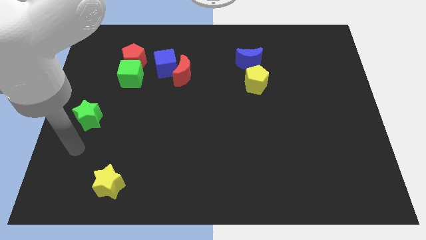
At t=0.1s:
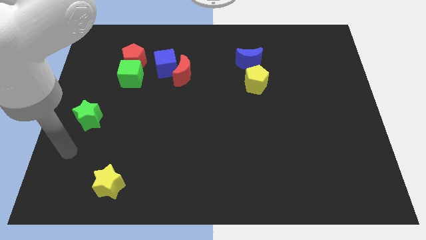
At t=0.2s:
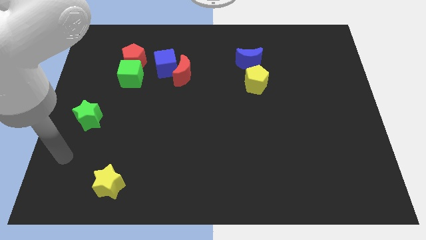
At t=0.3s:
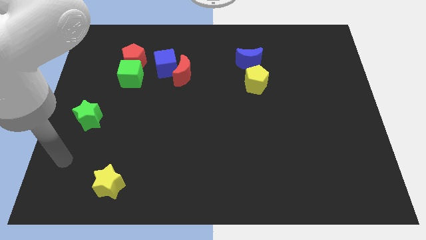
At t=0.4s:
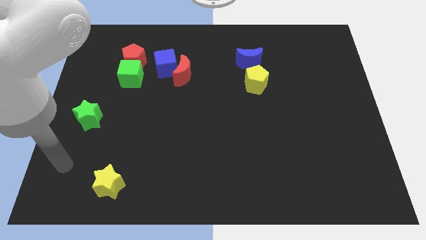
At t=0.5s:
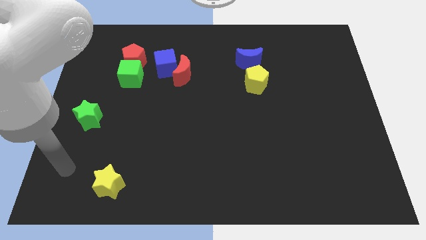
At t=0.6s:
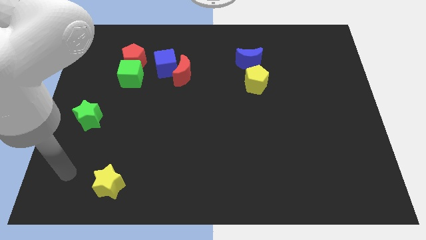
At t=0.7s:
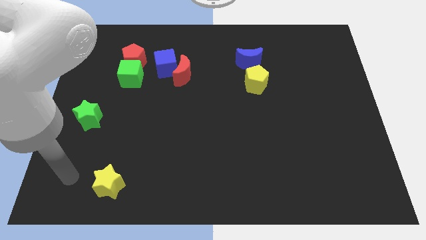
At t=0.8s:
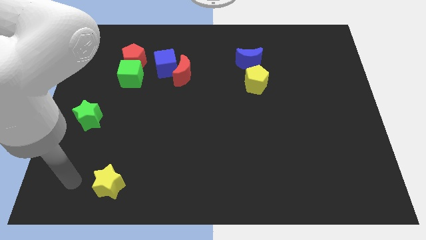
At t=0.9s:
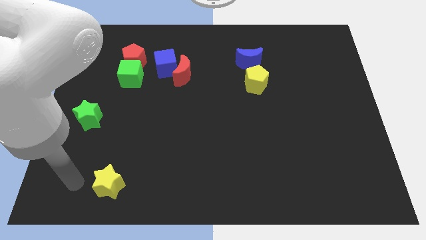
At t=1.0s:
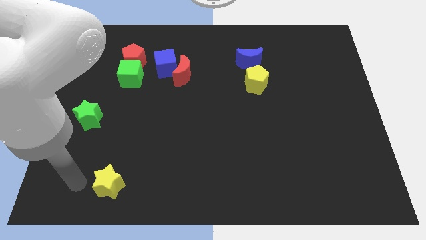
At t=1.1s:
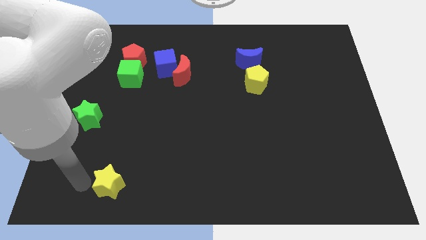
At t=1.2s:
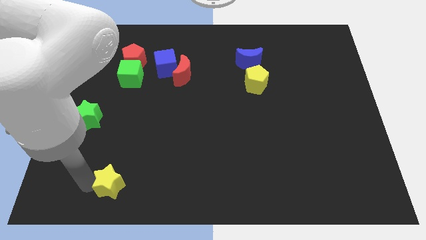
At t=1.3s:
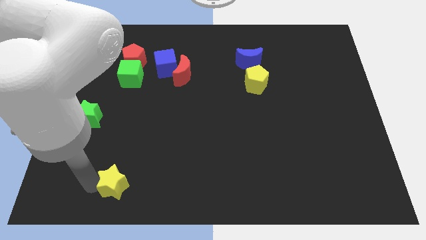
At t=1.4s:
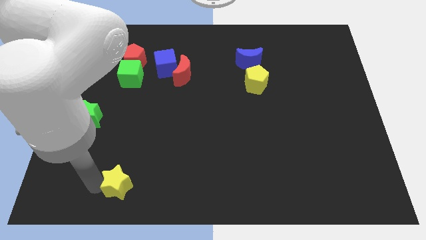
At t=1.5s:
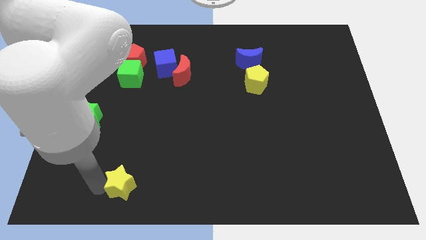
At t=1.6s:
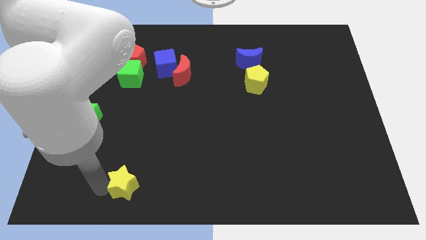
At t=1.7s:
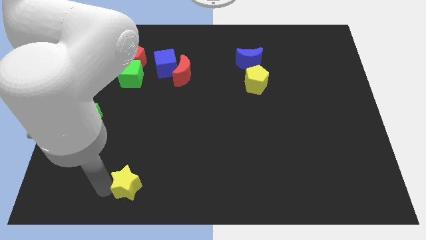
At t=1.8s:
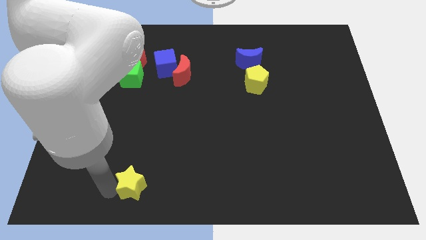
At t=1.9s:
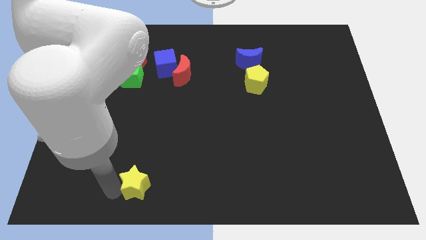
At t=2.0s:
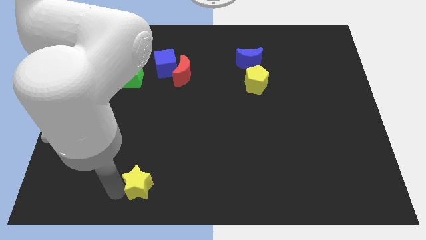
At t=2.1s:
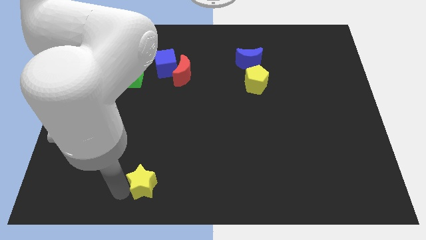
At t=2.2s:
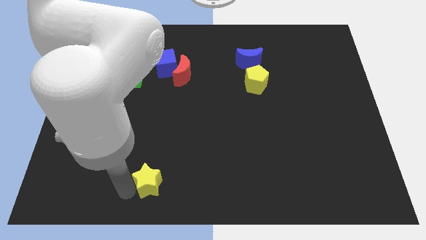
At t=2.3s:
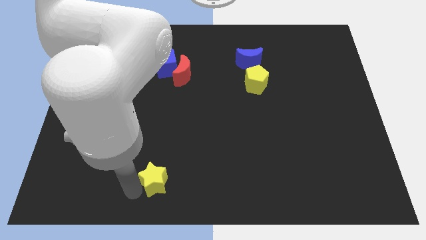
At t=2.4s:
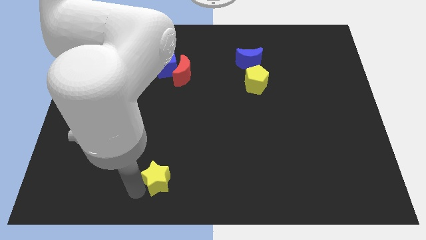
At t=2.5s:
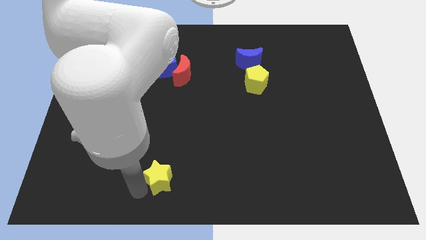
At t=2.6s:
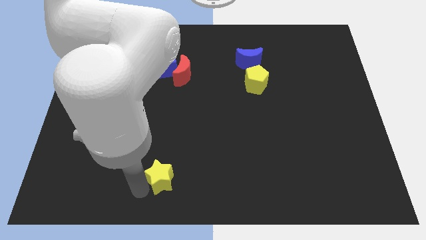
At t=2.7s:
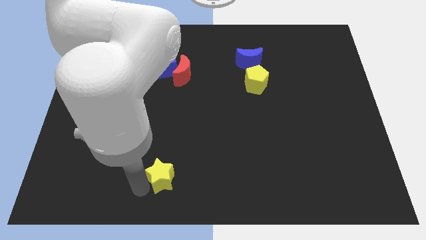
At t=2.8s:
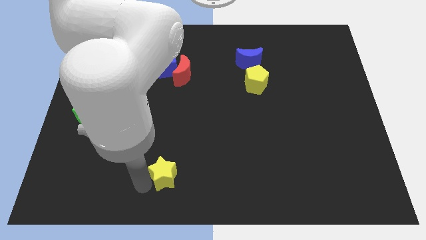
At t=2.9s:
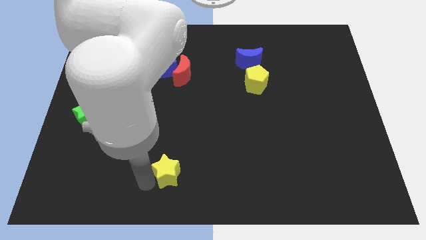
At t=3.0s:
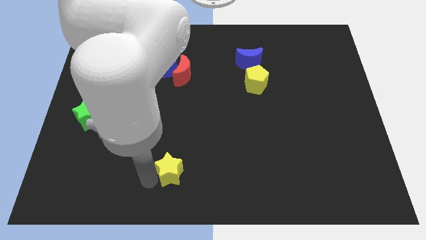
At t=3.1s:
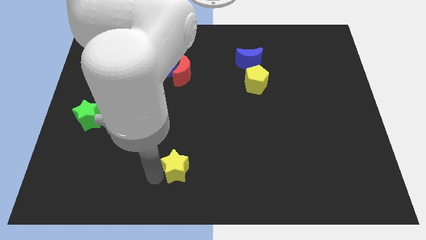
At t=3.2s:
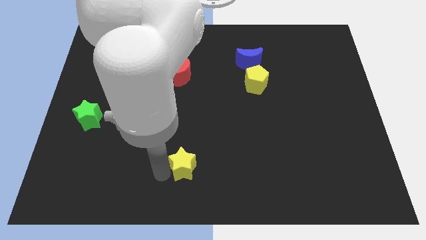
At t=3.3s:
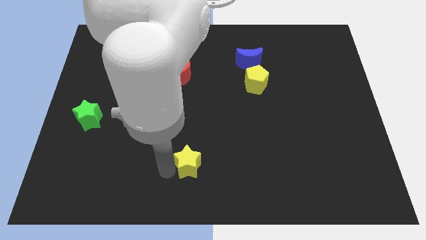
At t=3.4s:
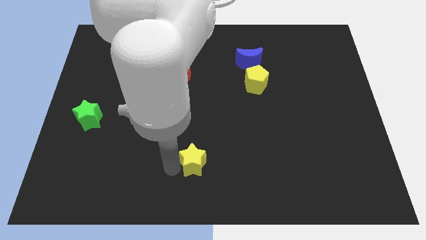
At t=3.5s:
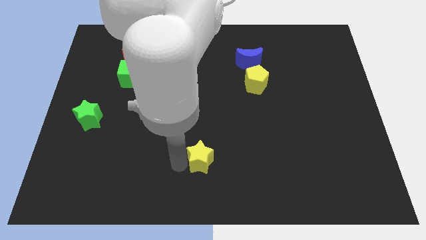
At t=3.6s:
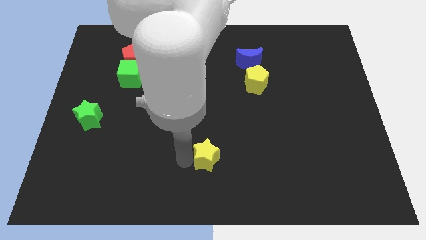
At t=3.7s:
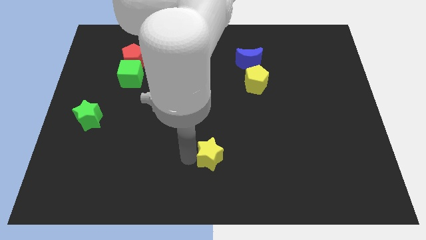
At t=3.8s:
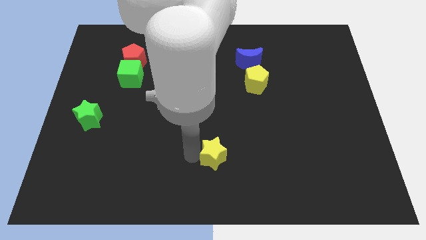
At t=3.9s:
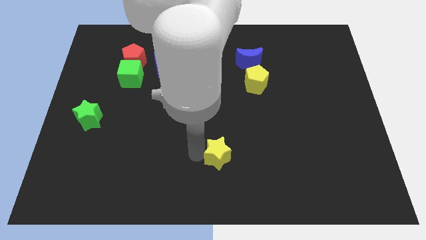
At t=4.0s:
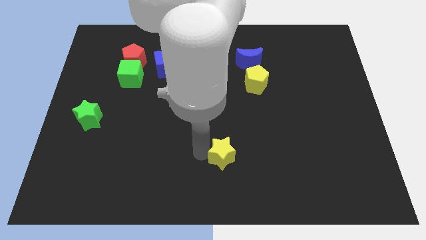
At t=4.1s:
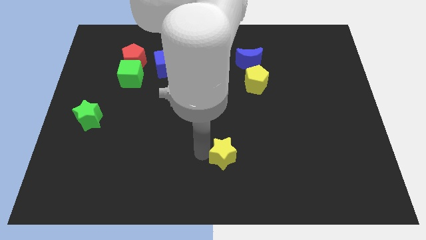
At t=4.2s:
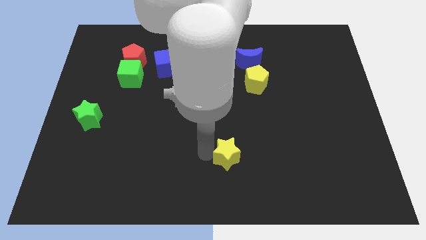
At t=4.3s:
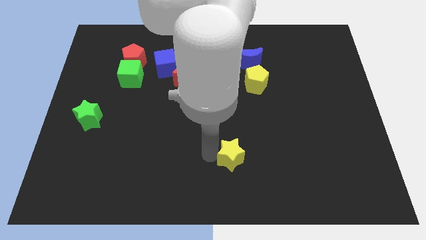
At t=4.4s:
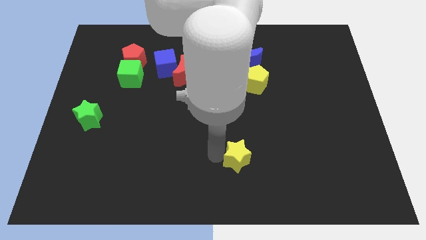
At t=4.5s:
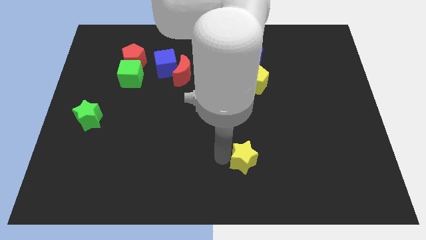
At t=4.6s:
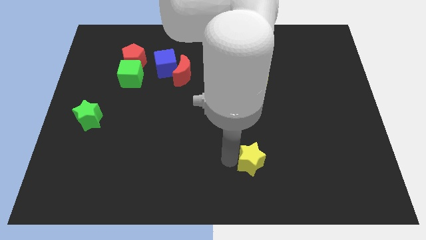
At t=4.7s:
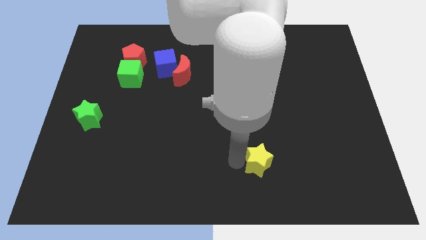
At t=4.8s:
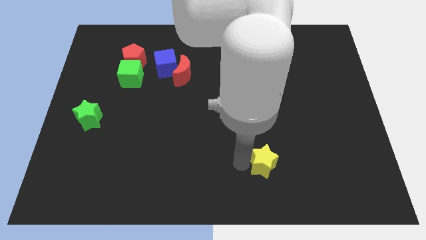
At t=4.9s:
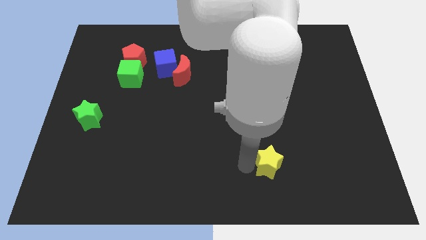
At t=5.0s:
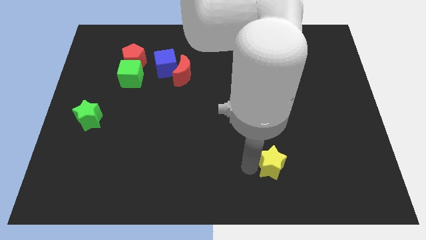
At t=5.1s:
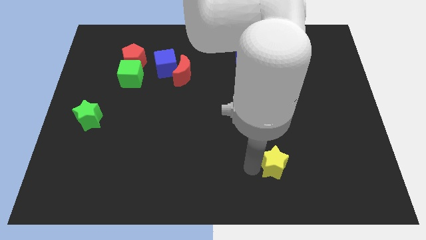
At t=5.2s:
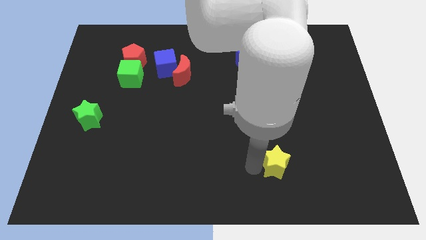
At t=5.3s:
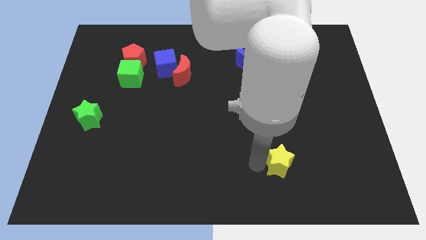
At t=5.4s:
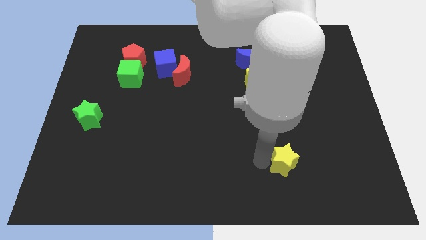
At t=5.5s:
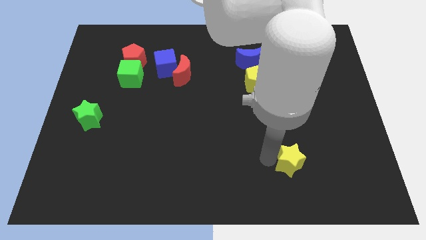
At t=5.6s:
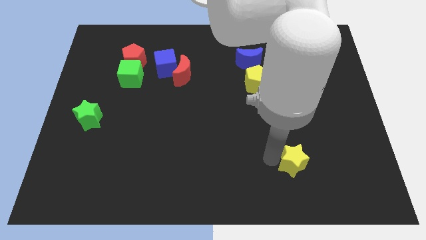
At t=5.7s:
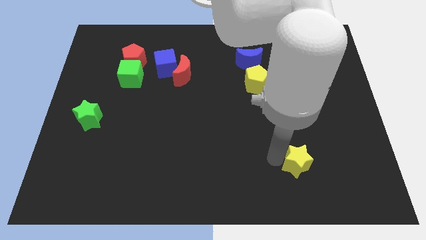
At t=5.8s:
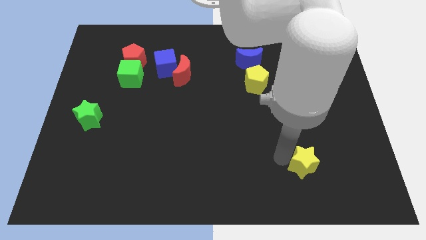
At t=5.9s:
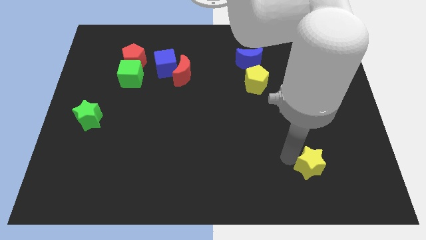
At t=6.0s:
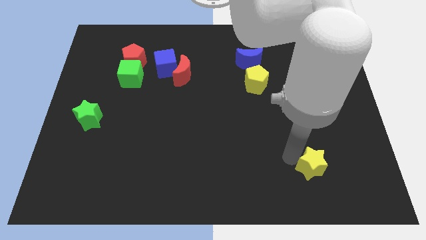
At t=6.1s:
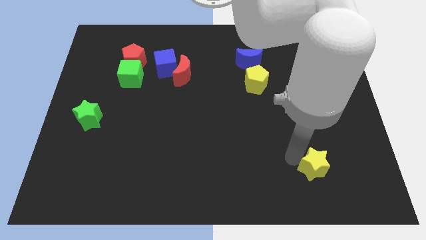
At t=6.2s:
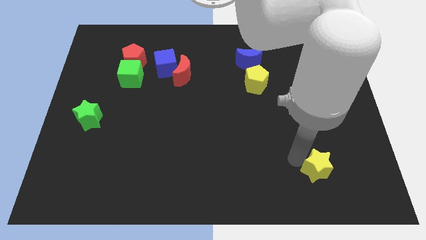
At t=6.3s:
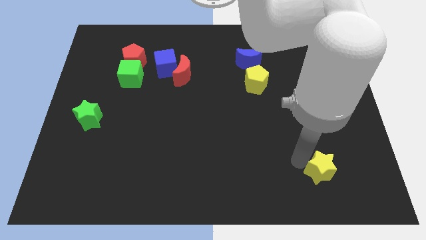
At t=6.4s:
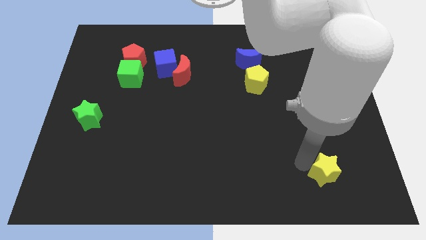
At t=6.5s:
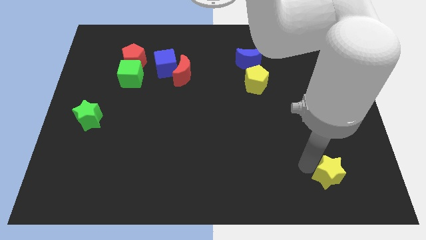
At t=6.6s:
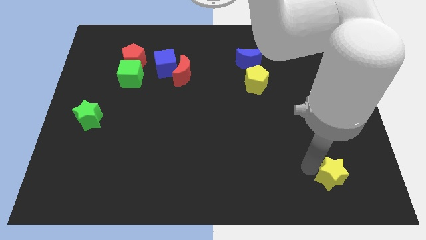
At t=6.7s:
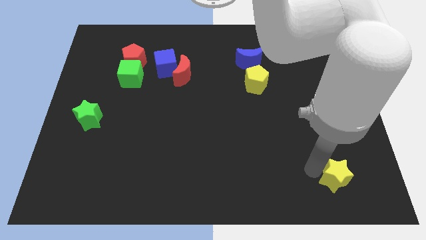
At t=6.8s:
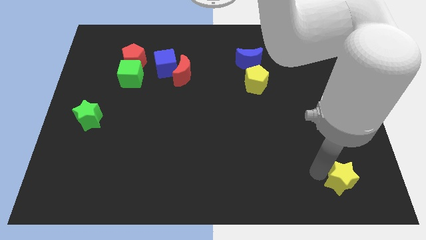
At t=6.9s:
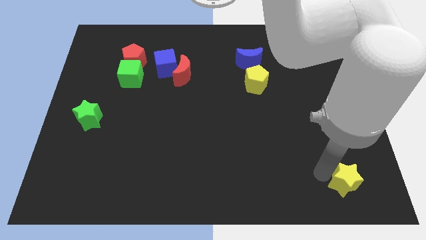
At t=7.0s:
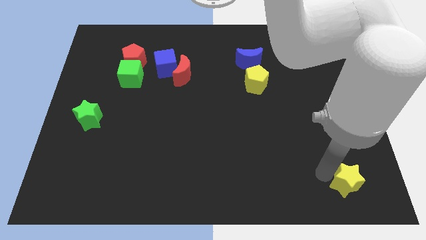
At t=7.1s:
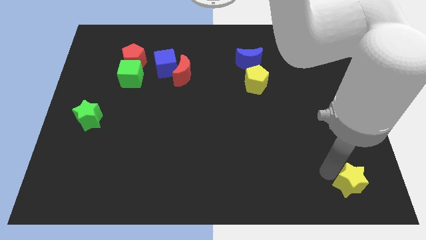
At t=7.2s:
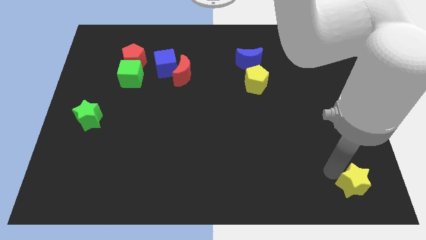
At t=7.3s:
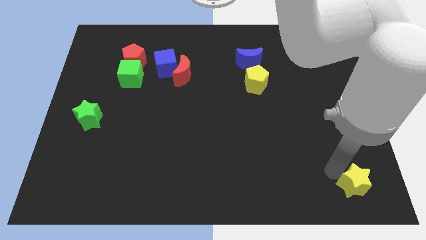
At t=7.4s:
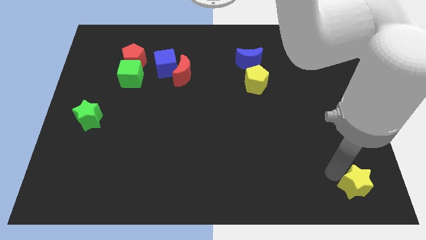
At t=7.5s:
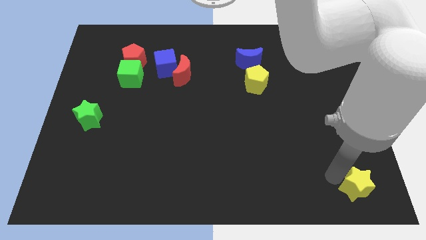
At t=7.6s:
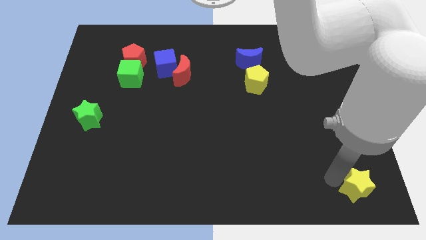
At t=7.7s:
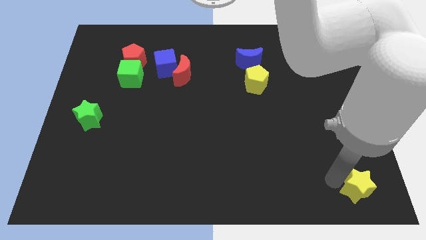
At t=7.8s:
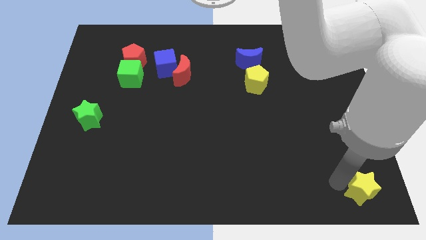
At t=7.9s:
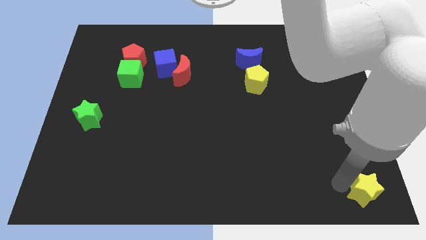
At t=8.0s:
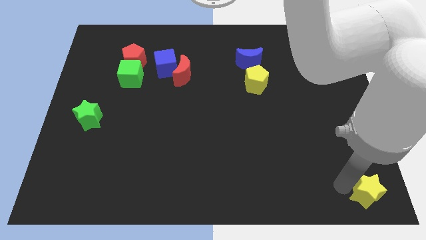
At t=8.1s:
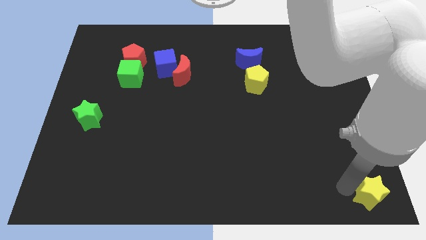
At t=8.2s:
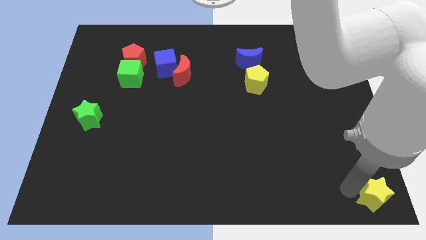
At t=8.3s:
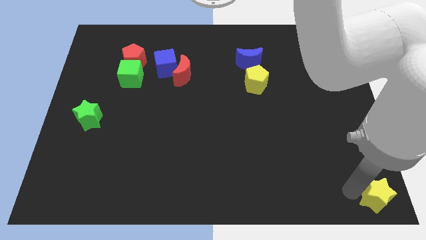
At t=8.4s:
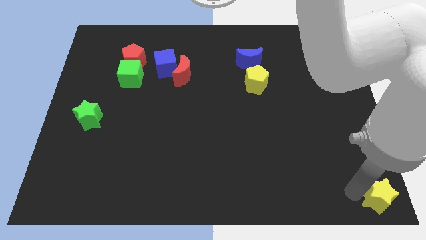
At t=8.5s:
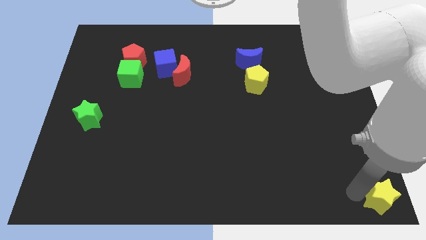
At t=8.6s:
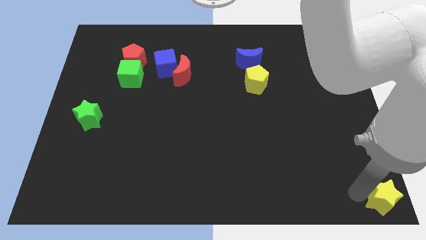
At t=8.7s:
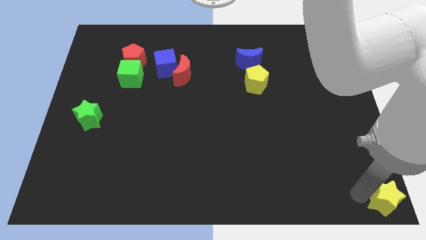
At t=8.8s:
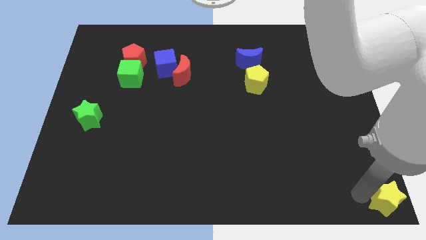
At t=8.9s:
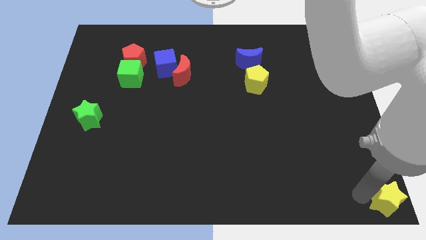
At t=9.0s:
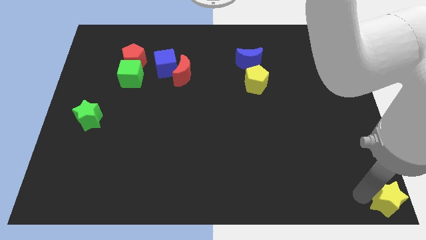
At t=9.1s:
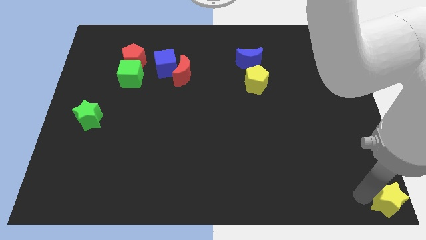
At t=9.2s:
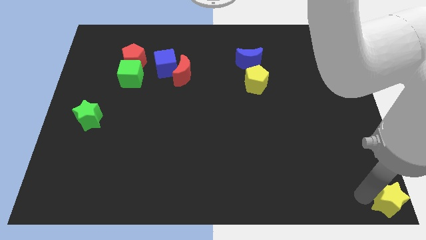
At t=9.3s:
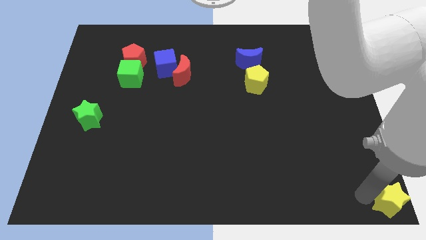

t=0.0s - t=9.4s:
push the yellow star down to the bottom right corner
